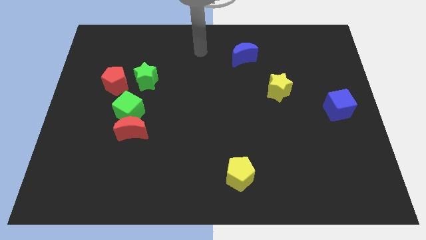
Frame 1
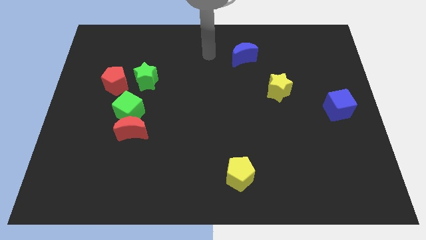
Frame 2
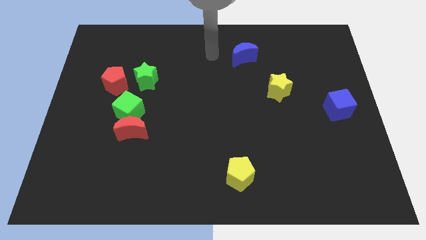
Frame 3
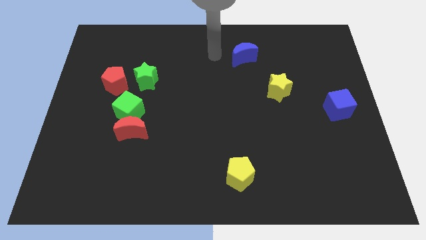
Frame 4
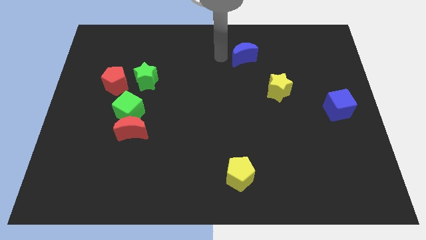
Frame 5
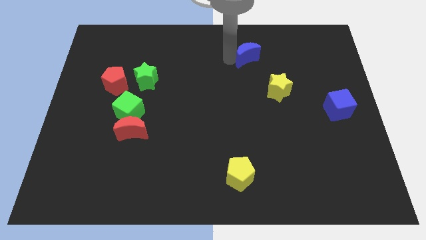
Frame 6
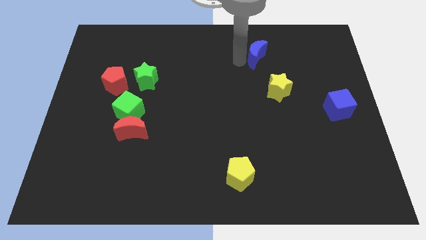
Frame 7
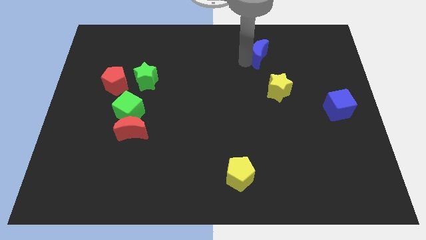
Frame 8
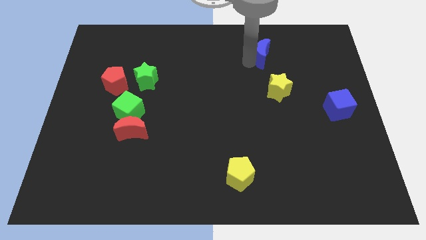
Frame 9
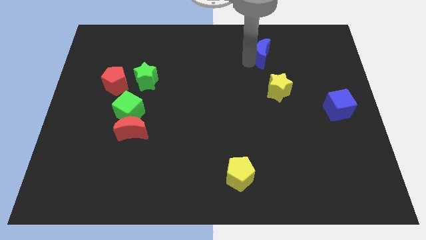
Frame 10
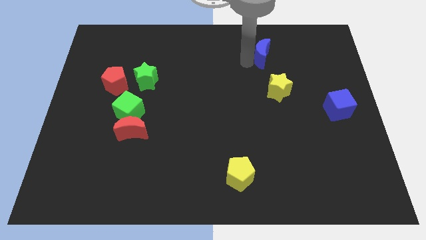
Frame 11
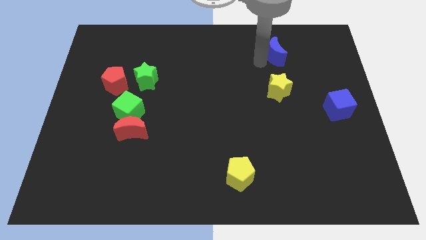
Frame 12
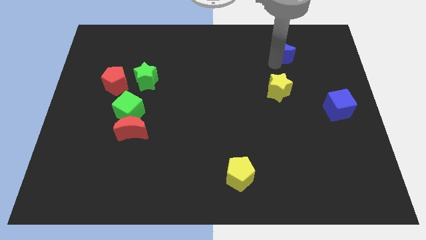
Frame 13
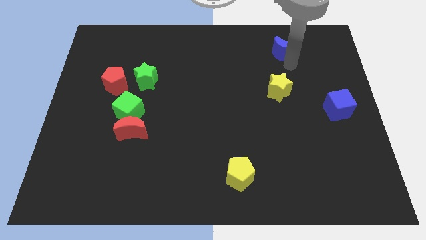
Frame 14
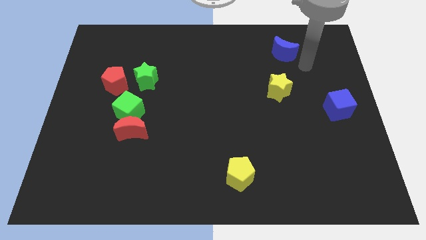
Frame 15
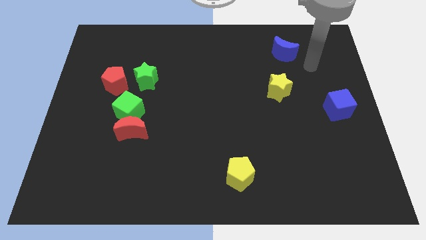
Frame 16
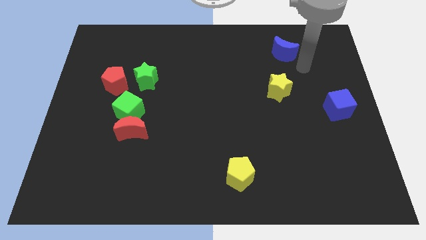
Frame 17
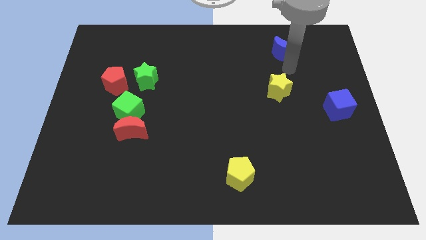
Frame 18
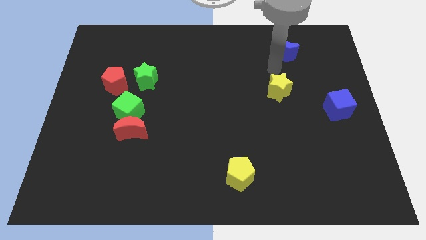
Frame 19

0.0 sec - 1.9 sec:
push the blue crescent towards the right of the board

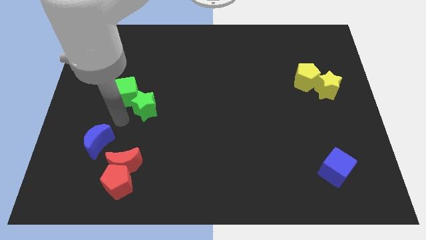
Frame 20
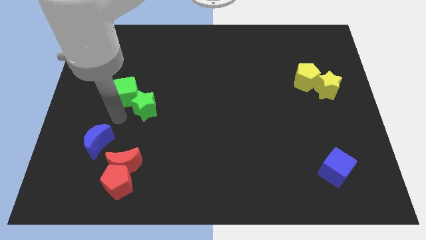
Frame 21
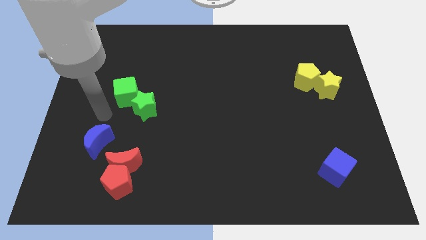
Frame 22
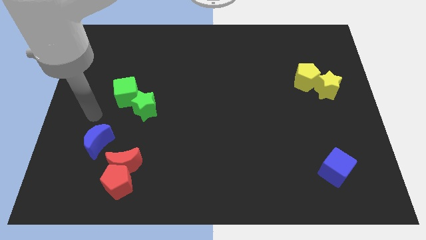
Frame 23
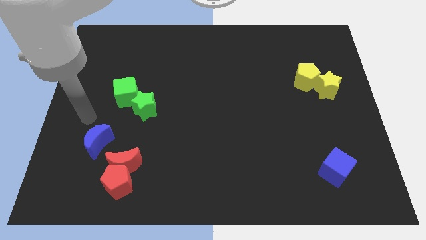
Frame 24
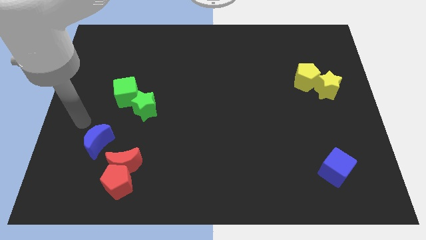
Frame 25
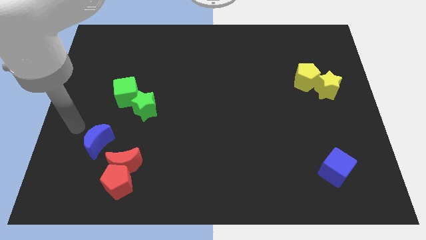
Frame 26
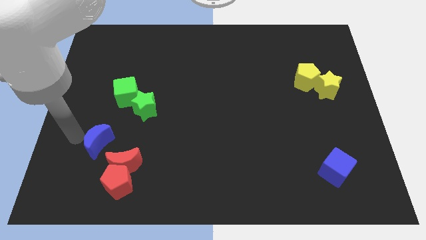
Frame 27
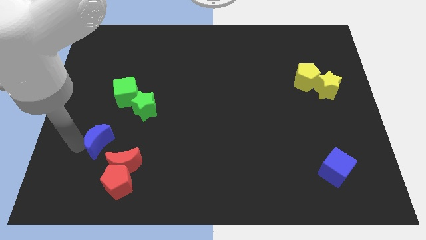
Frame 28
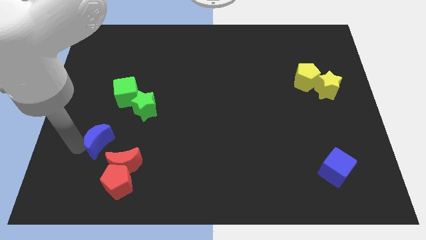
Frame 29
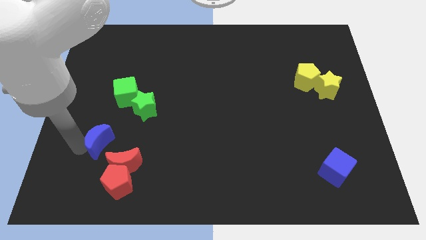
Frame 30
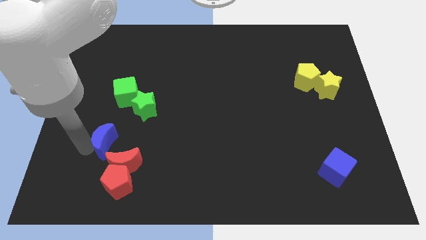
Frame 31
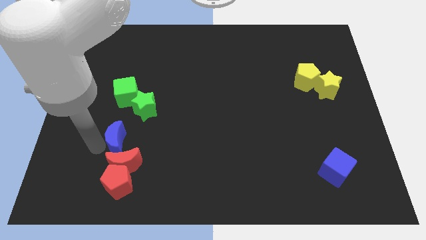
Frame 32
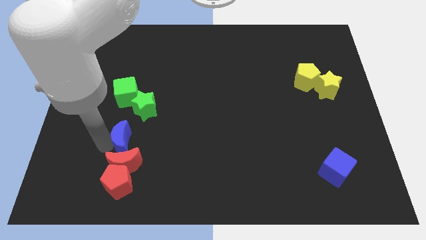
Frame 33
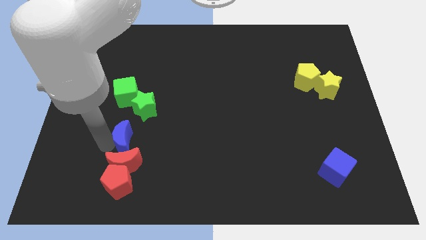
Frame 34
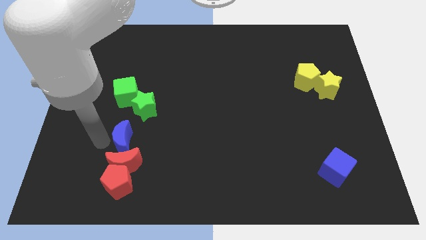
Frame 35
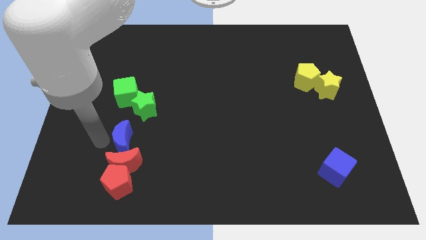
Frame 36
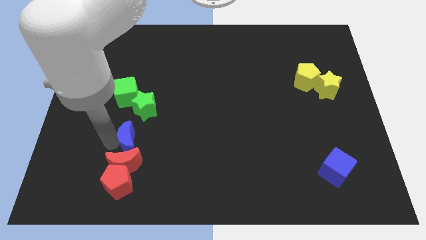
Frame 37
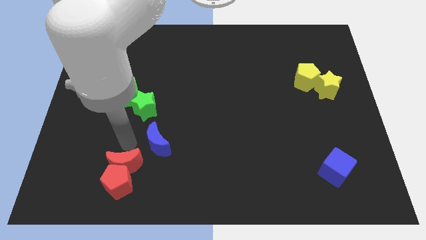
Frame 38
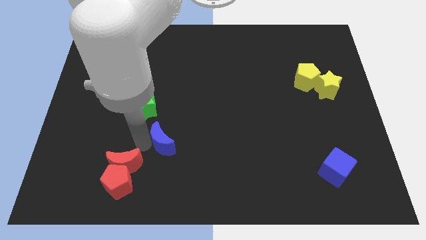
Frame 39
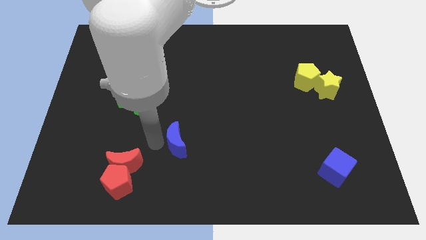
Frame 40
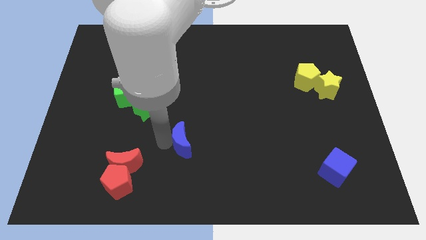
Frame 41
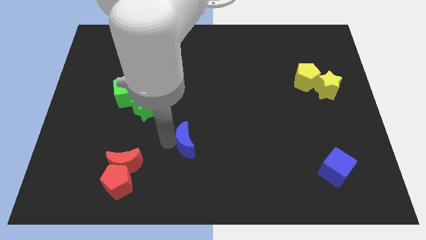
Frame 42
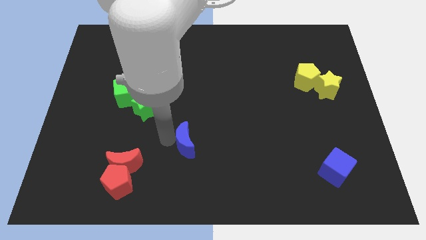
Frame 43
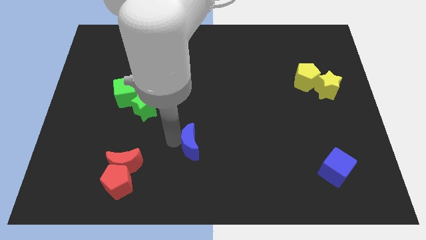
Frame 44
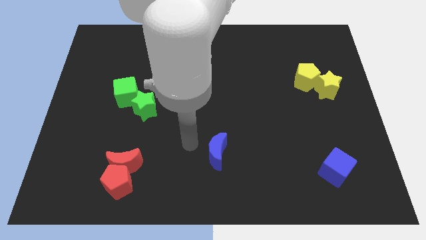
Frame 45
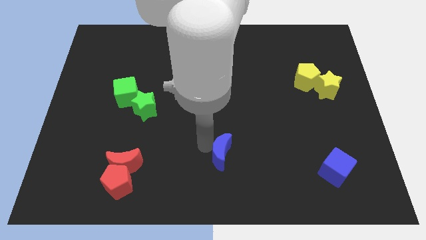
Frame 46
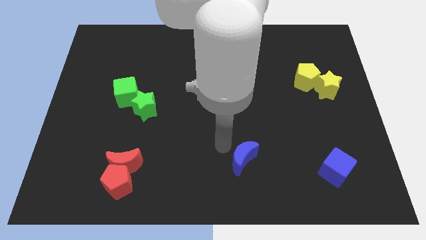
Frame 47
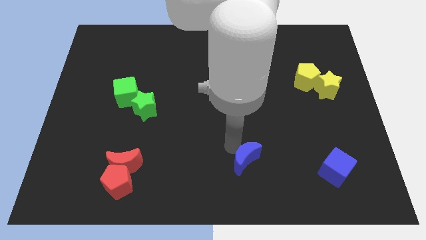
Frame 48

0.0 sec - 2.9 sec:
push the blue moon towards the blue cube

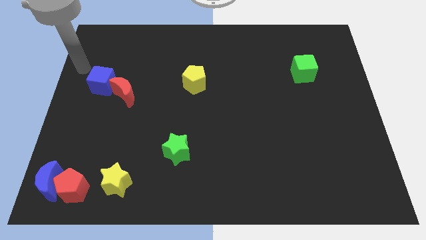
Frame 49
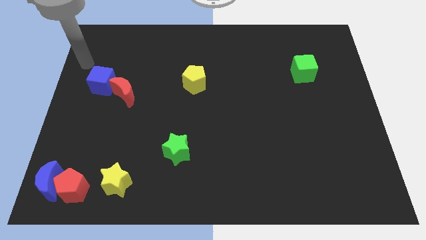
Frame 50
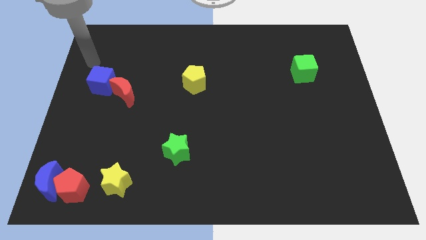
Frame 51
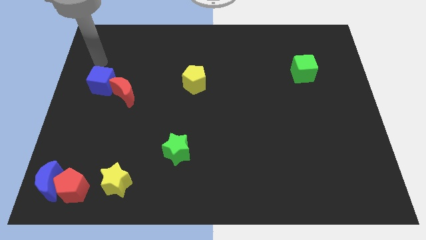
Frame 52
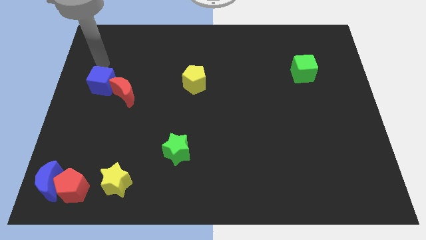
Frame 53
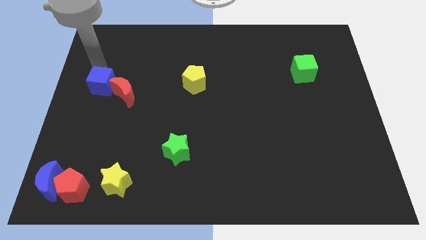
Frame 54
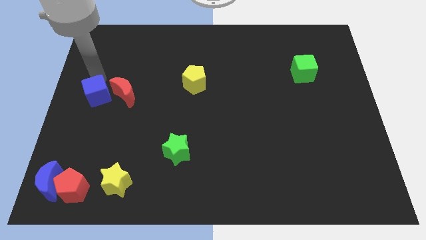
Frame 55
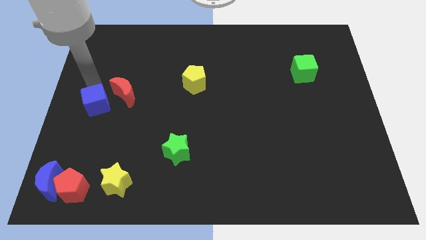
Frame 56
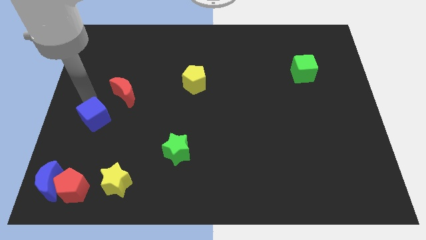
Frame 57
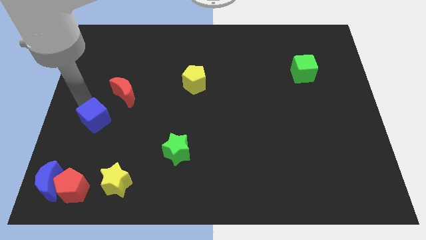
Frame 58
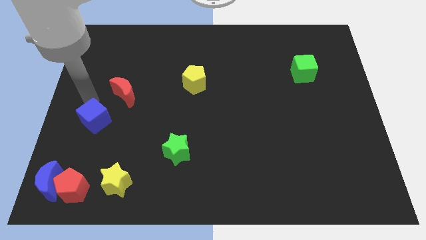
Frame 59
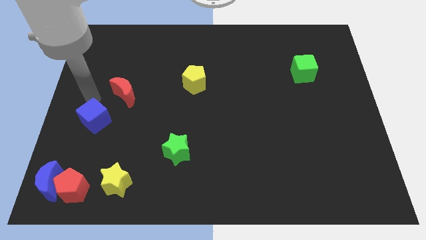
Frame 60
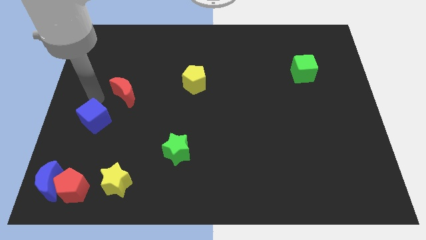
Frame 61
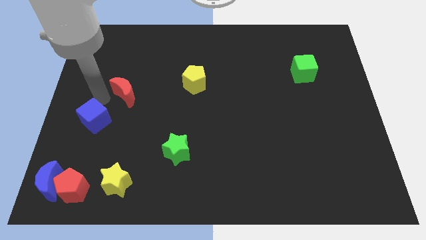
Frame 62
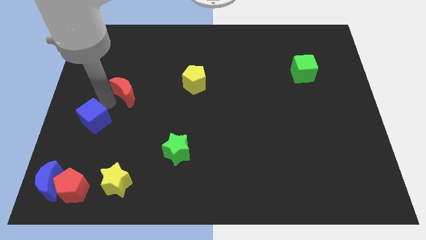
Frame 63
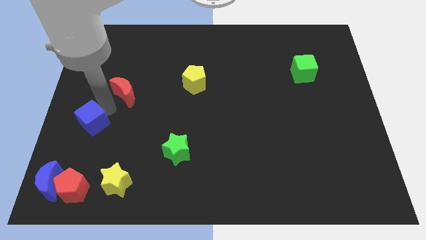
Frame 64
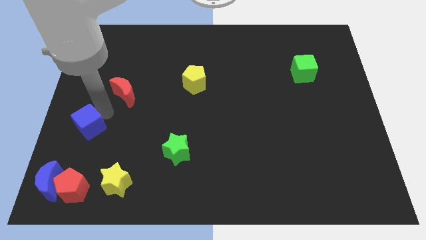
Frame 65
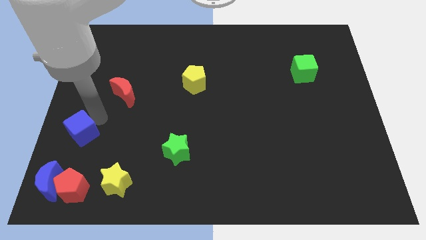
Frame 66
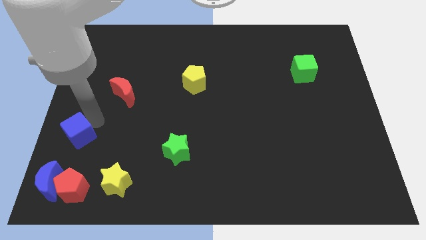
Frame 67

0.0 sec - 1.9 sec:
move the blue cube to the bottom of the board

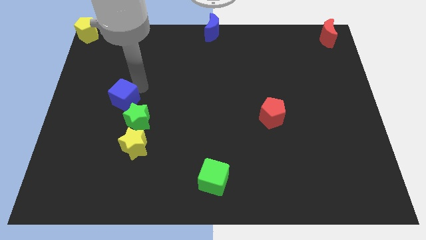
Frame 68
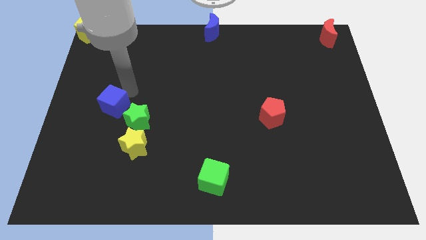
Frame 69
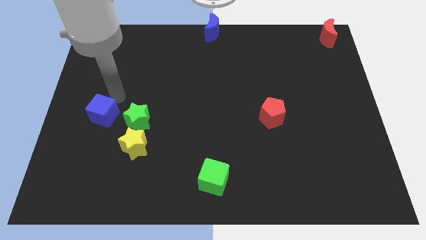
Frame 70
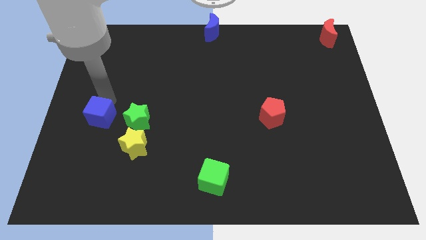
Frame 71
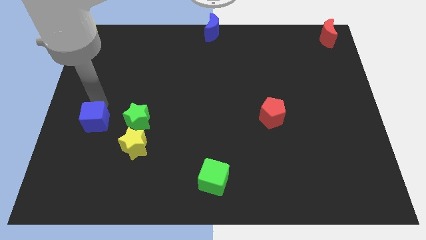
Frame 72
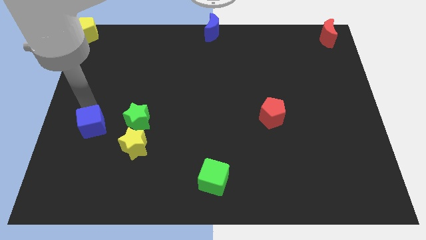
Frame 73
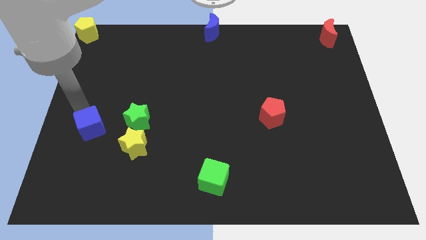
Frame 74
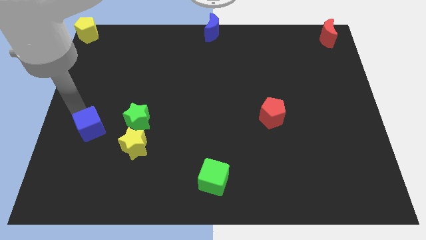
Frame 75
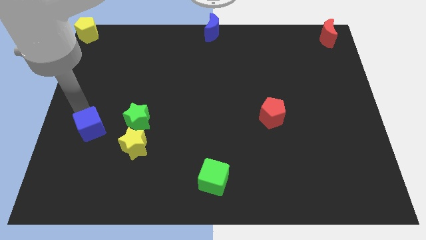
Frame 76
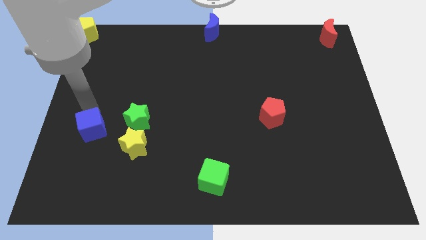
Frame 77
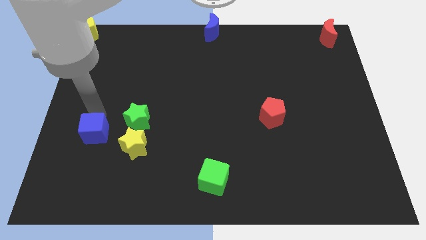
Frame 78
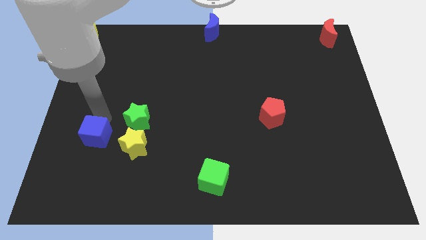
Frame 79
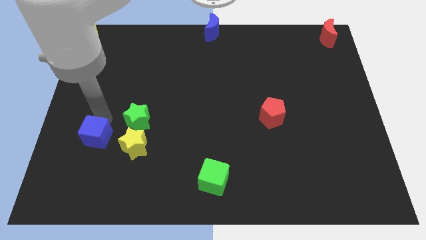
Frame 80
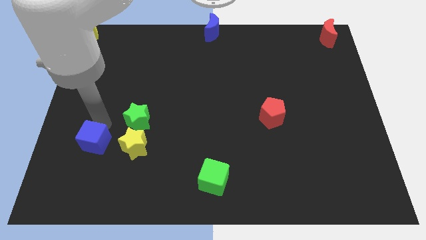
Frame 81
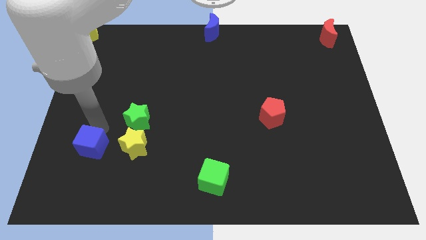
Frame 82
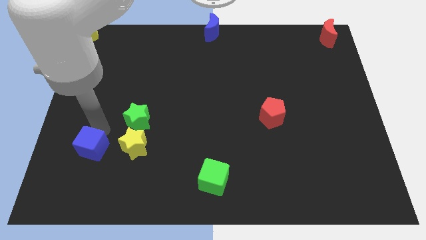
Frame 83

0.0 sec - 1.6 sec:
push blue cube beside yellow star

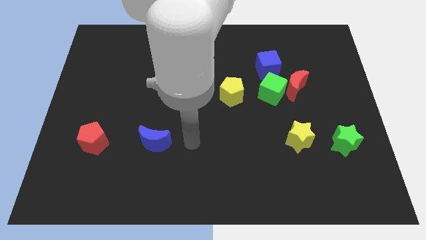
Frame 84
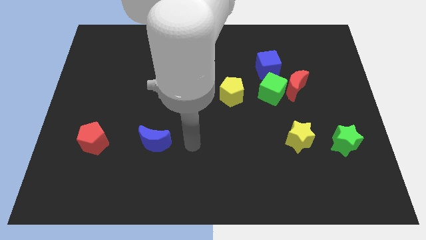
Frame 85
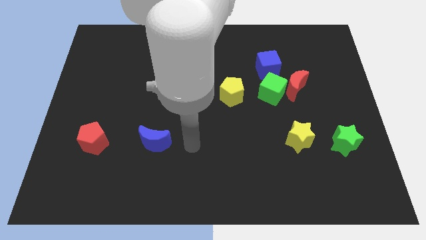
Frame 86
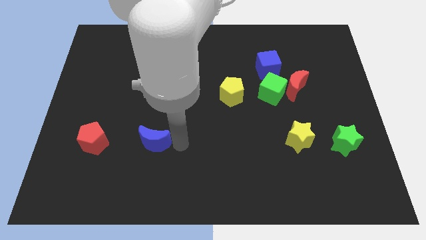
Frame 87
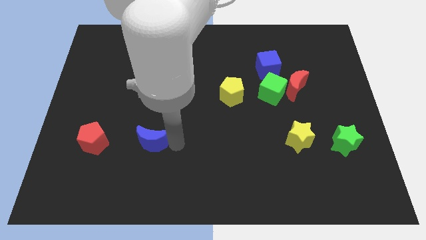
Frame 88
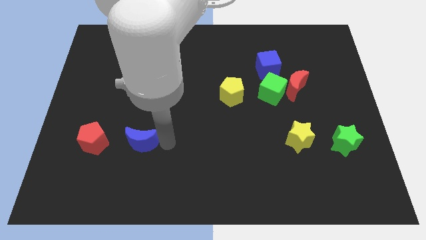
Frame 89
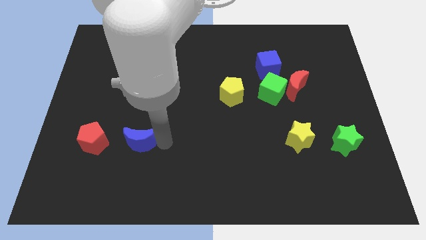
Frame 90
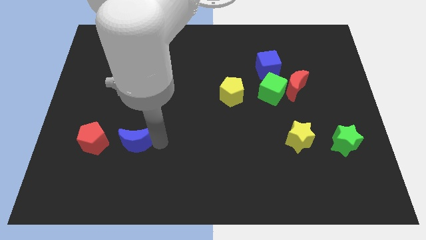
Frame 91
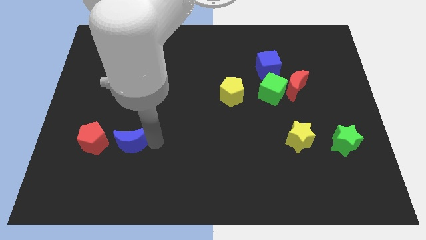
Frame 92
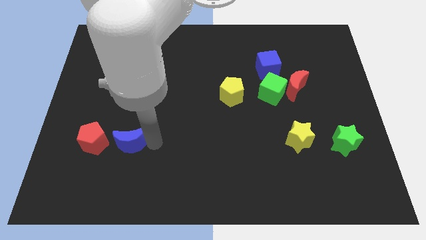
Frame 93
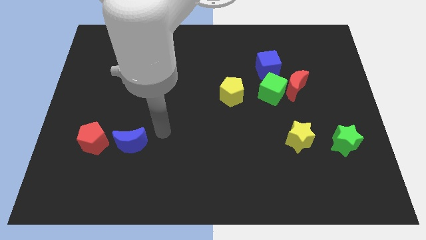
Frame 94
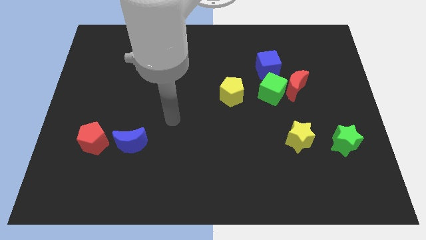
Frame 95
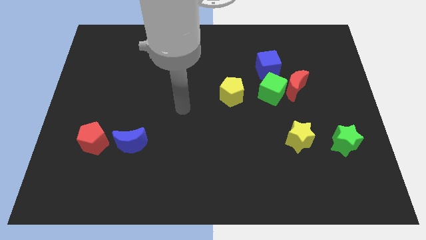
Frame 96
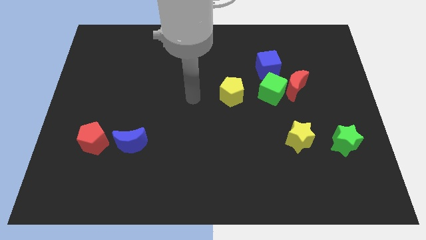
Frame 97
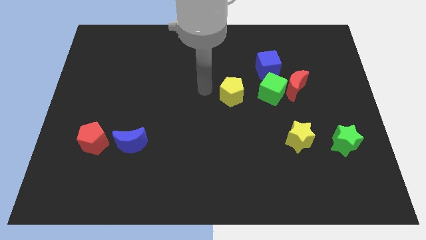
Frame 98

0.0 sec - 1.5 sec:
push the blue crescent slightly towards the red pentagon
